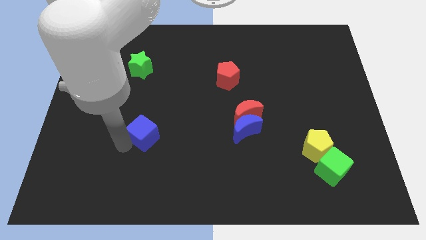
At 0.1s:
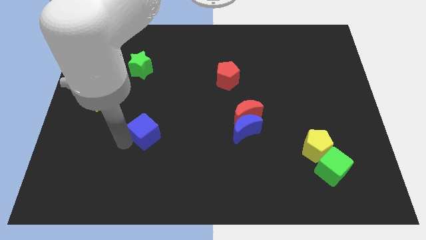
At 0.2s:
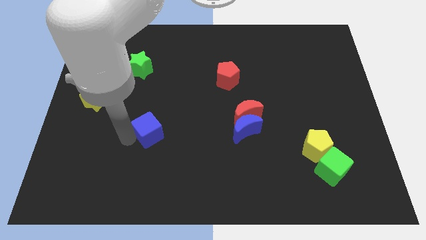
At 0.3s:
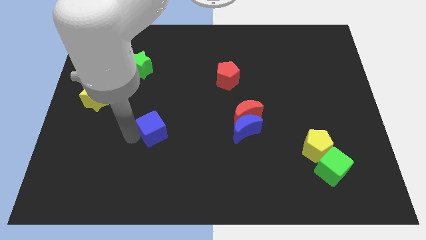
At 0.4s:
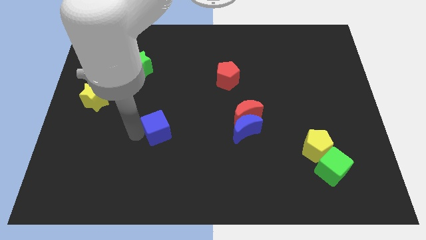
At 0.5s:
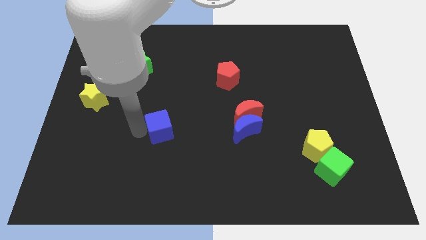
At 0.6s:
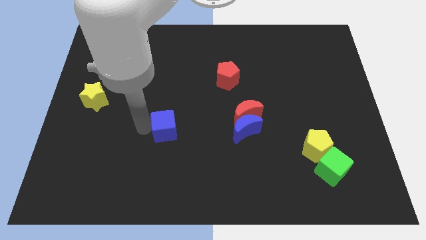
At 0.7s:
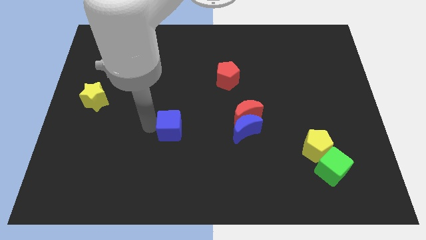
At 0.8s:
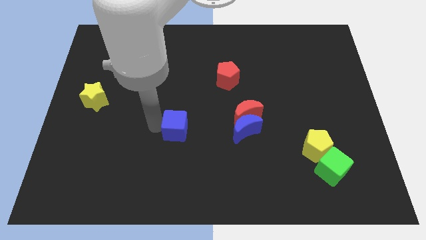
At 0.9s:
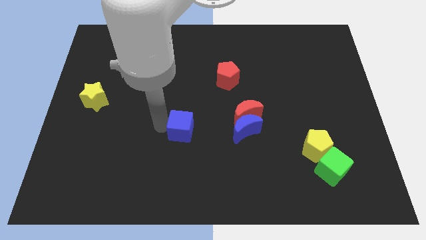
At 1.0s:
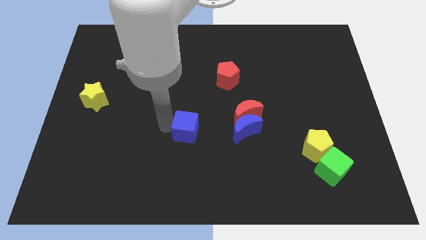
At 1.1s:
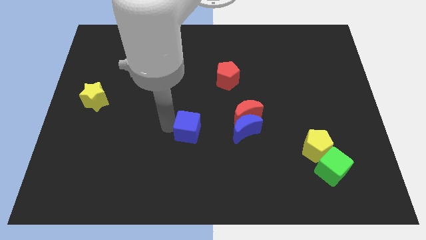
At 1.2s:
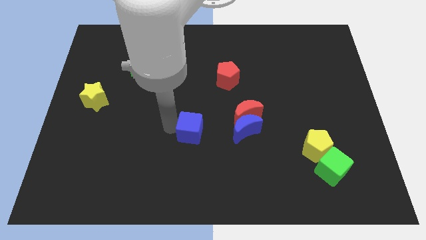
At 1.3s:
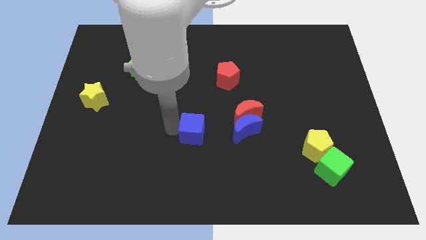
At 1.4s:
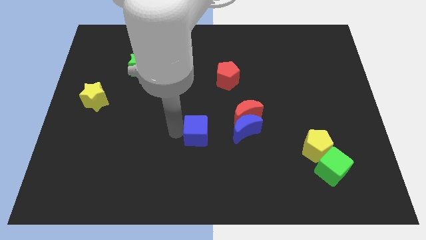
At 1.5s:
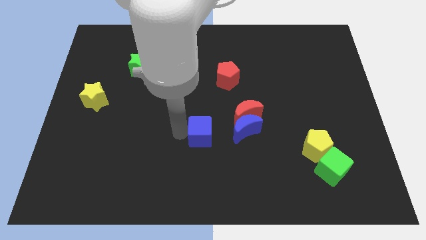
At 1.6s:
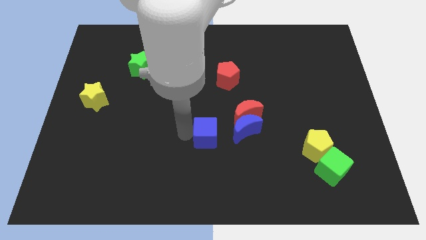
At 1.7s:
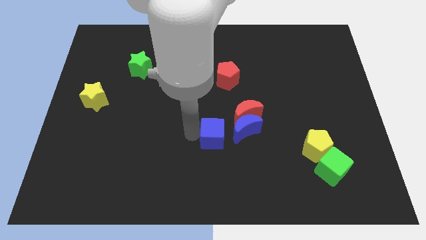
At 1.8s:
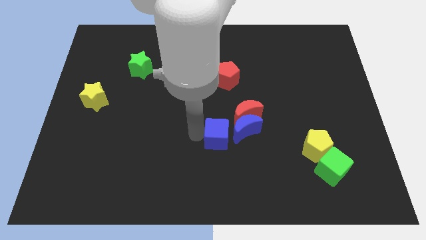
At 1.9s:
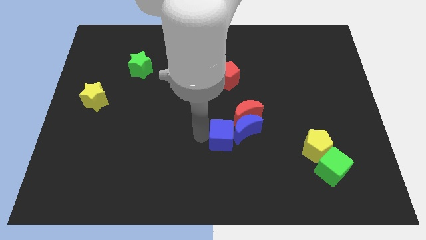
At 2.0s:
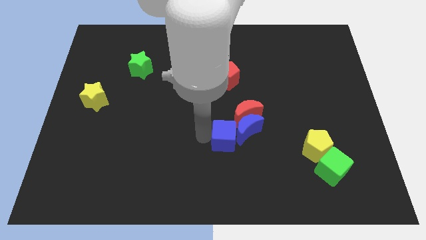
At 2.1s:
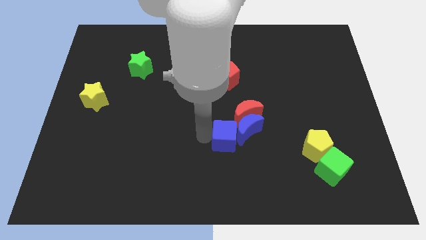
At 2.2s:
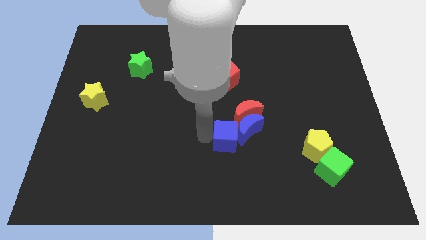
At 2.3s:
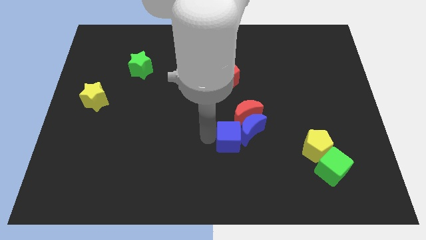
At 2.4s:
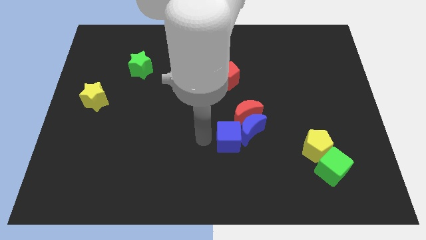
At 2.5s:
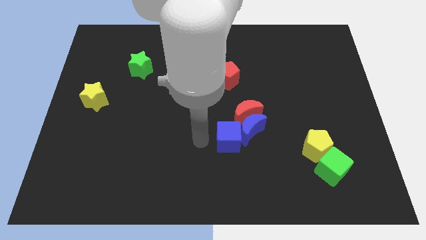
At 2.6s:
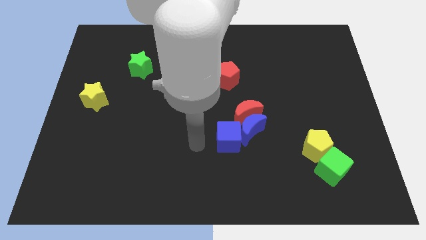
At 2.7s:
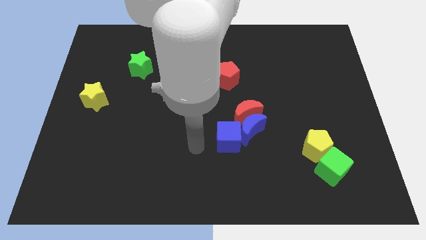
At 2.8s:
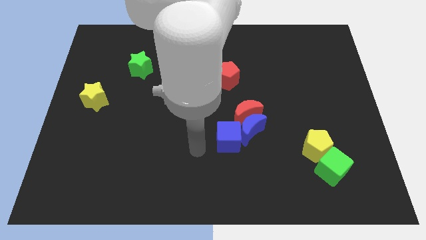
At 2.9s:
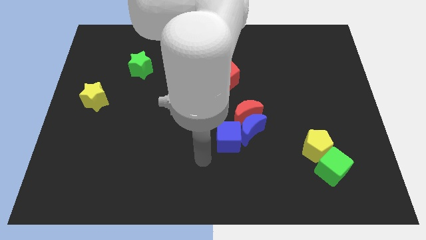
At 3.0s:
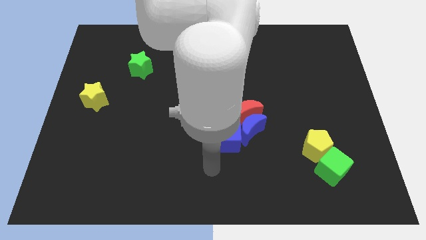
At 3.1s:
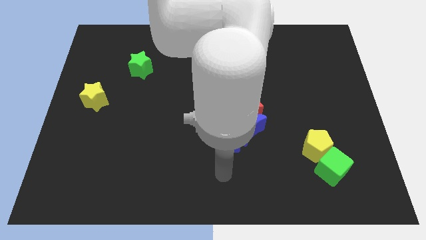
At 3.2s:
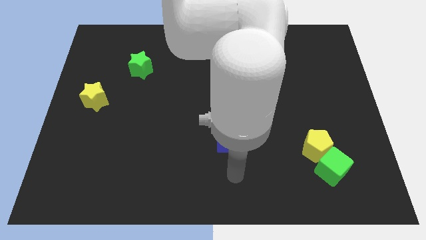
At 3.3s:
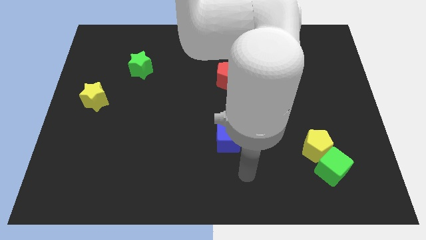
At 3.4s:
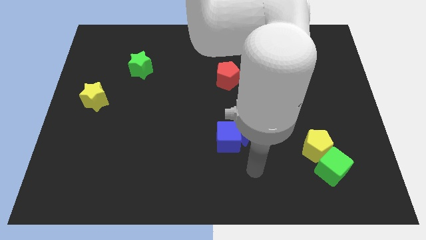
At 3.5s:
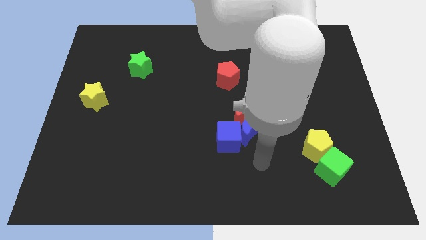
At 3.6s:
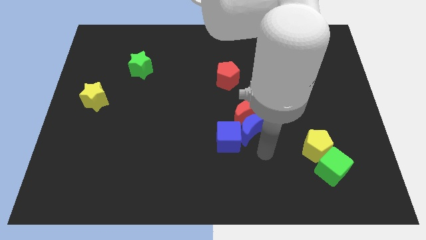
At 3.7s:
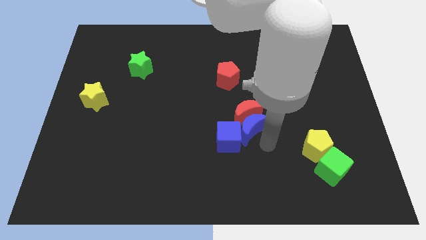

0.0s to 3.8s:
push the blue cube into the blue crescent from the left

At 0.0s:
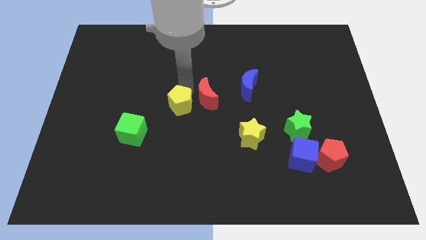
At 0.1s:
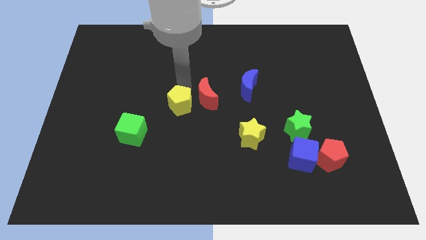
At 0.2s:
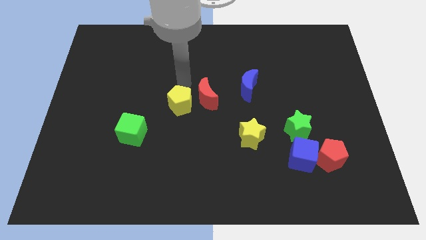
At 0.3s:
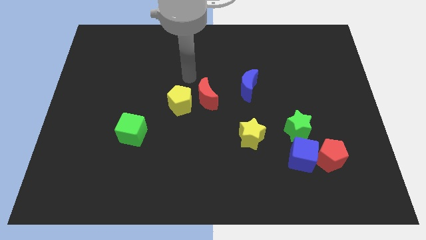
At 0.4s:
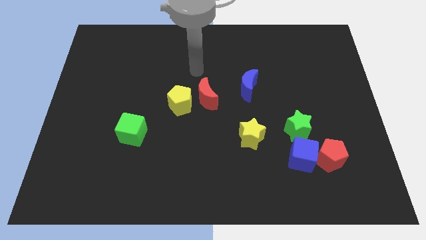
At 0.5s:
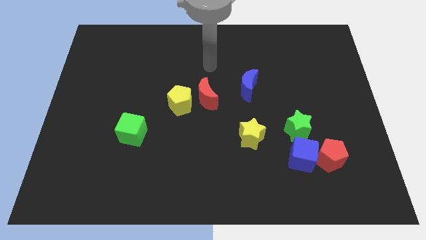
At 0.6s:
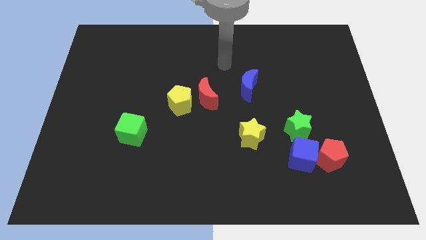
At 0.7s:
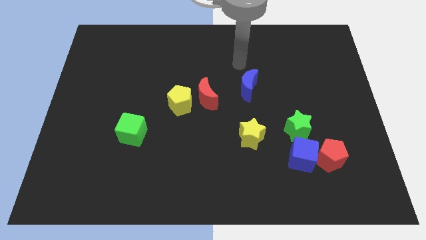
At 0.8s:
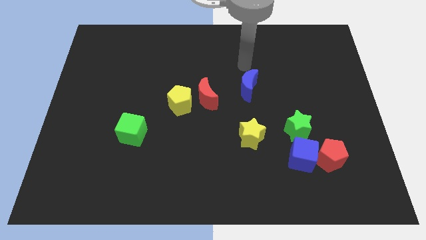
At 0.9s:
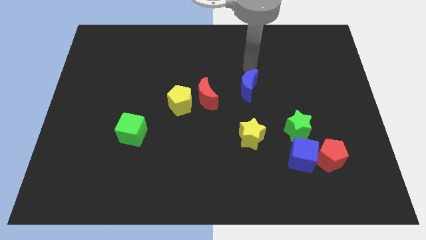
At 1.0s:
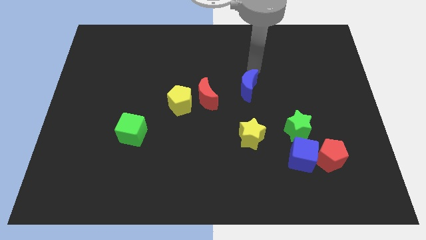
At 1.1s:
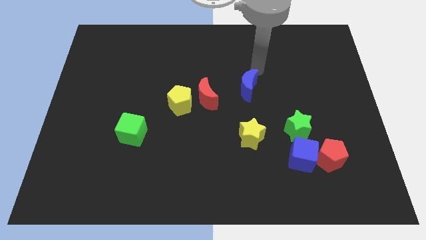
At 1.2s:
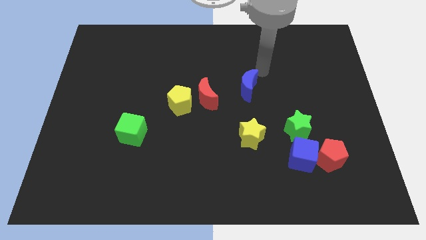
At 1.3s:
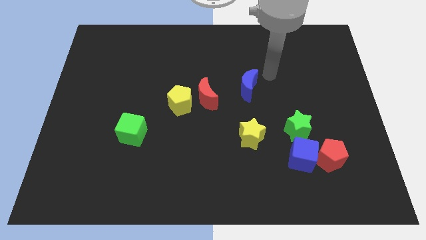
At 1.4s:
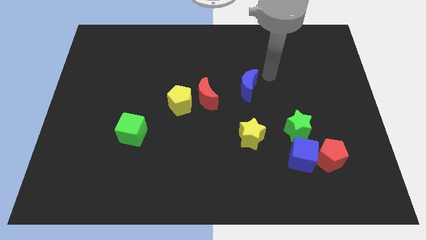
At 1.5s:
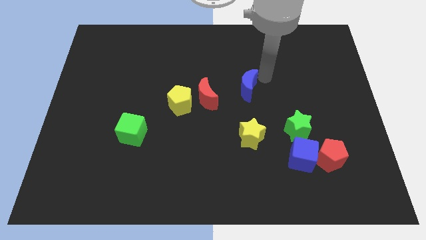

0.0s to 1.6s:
move your arm towards the top of the blue moon

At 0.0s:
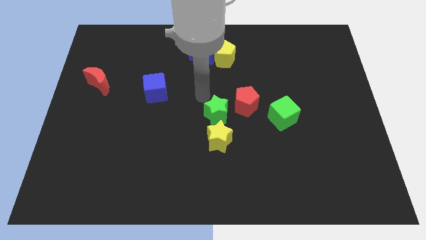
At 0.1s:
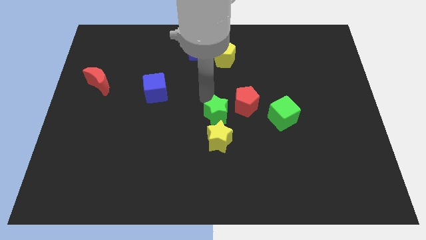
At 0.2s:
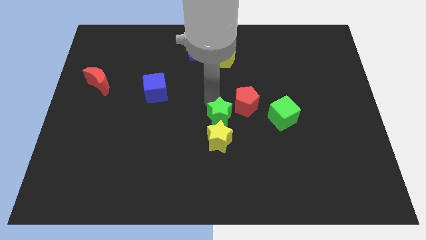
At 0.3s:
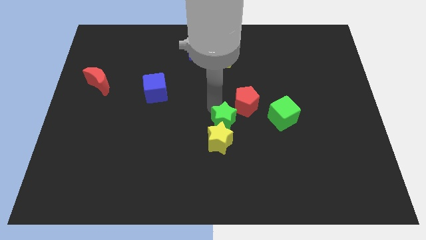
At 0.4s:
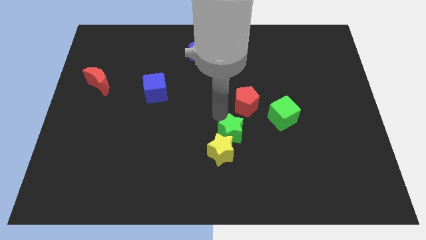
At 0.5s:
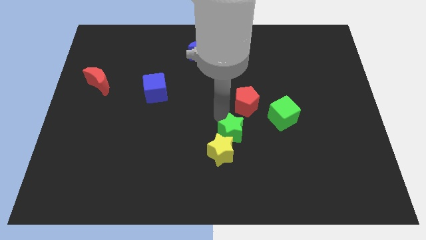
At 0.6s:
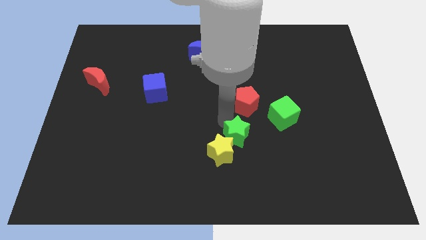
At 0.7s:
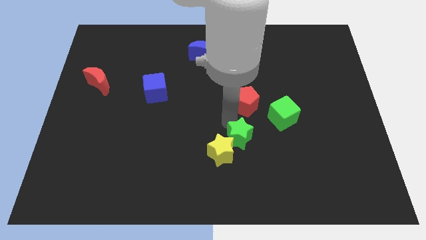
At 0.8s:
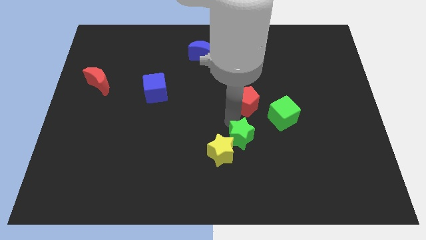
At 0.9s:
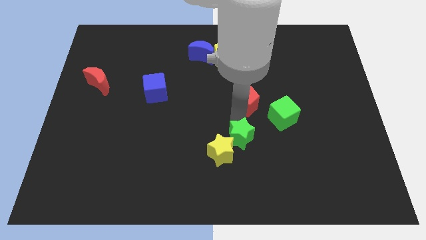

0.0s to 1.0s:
place green star below red pentagon

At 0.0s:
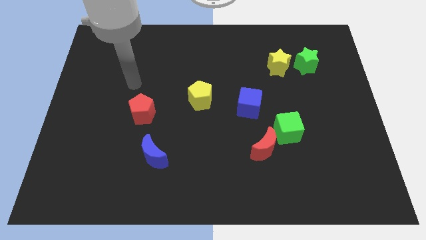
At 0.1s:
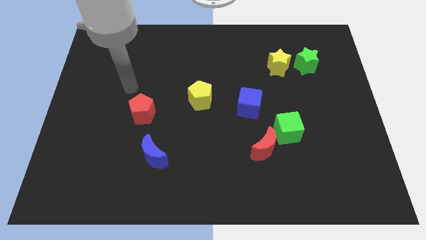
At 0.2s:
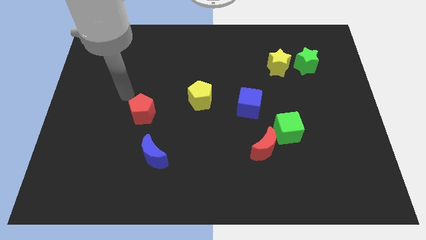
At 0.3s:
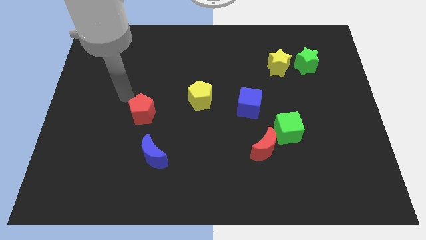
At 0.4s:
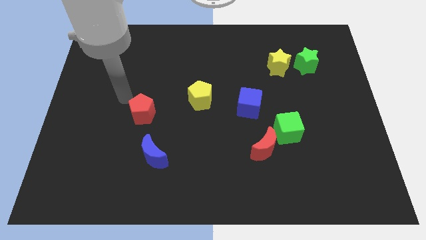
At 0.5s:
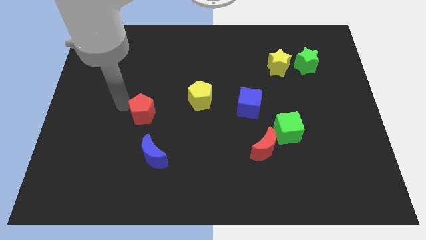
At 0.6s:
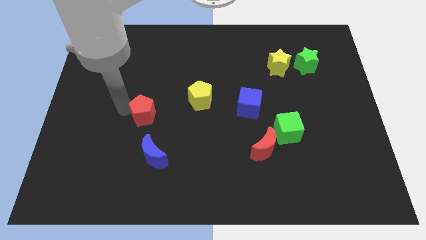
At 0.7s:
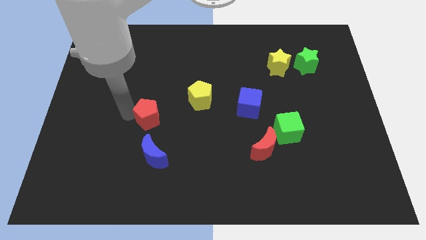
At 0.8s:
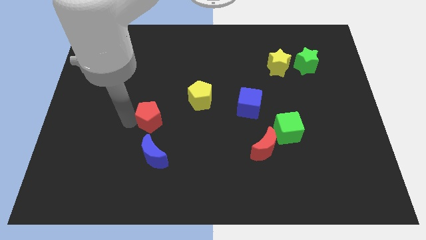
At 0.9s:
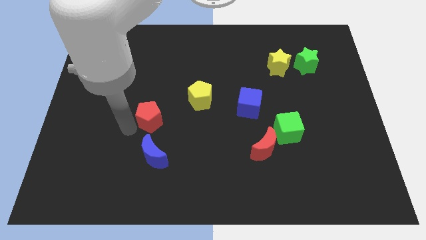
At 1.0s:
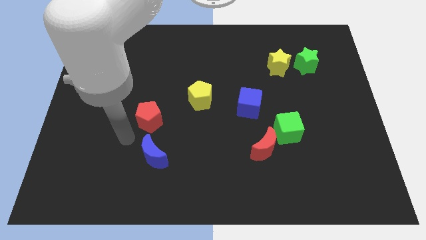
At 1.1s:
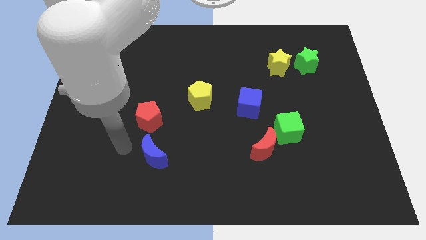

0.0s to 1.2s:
move the red pentagon slightly above the blue crescent

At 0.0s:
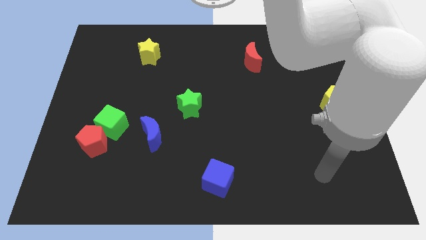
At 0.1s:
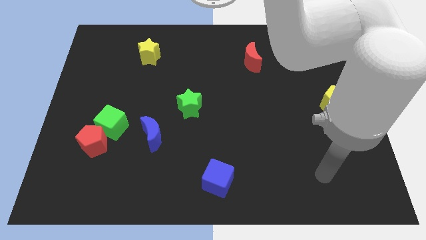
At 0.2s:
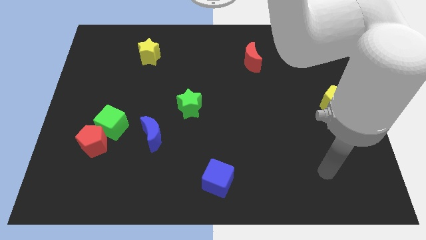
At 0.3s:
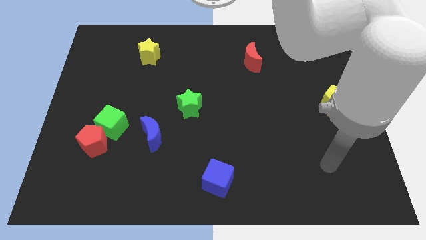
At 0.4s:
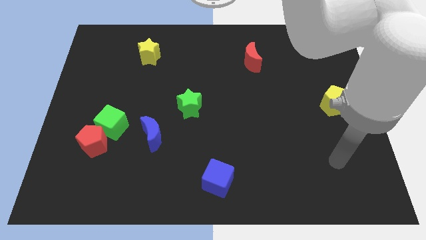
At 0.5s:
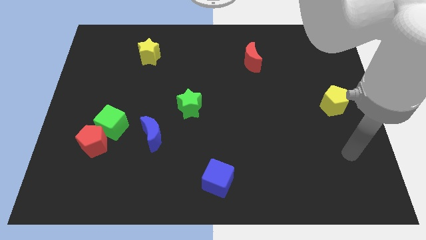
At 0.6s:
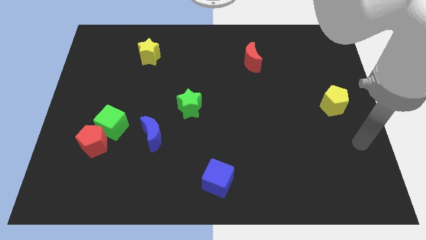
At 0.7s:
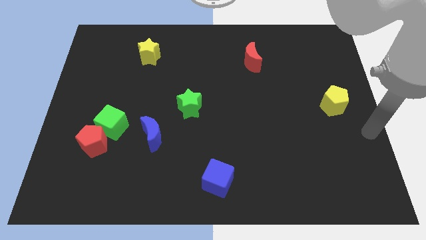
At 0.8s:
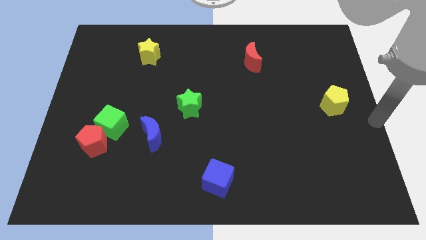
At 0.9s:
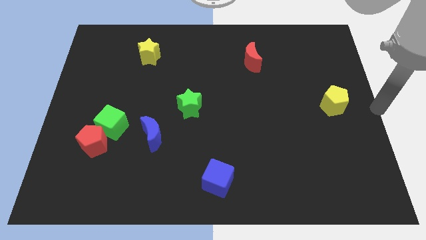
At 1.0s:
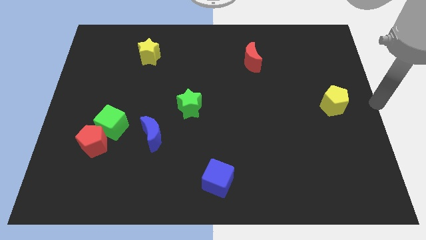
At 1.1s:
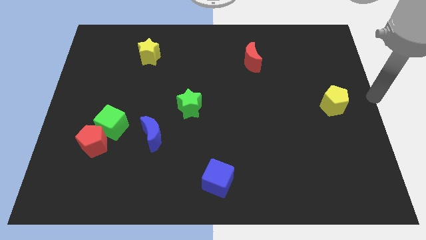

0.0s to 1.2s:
point your arm to the center right side of the board

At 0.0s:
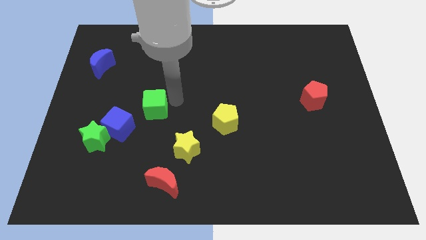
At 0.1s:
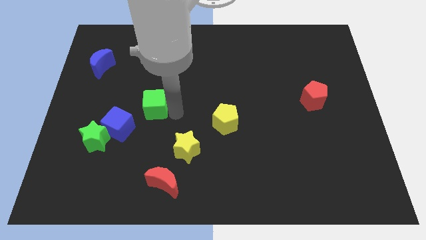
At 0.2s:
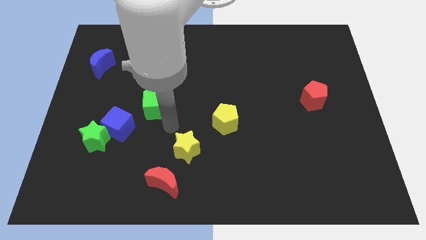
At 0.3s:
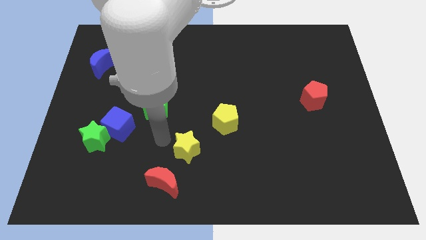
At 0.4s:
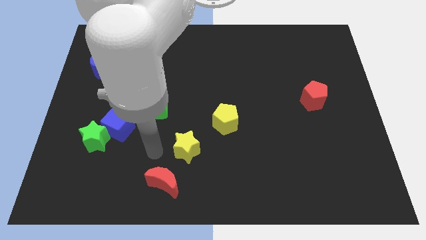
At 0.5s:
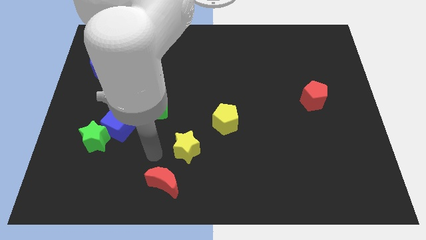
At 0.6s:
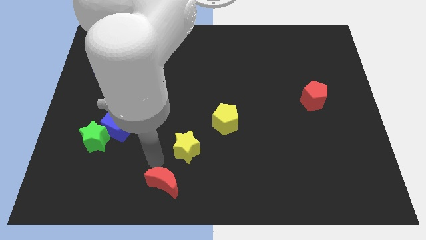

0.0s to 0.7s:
place your arm above red crescent
